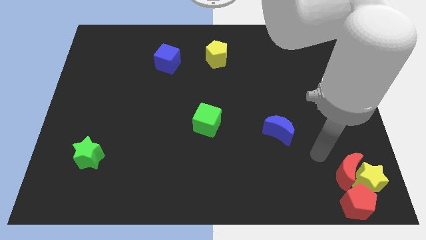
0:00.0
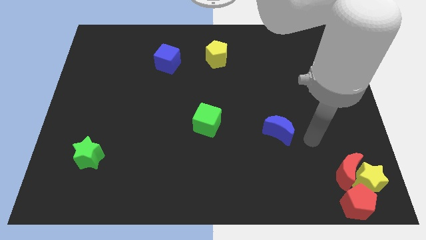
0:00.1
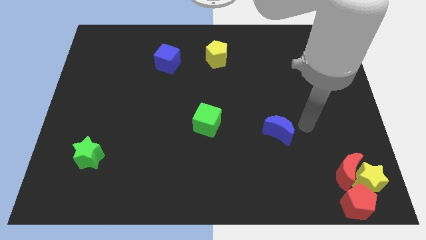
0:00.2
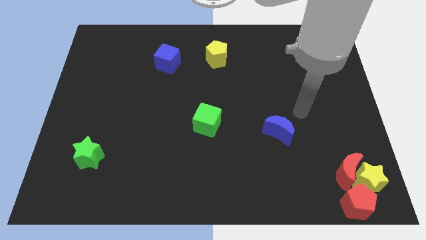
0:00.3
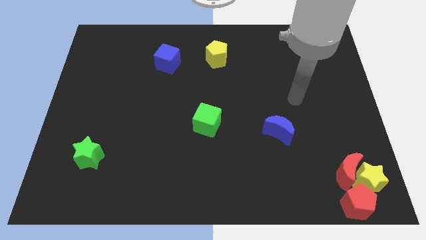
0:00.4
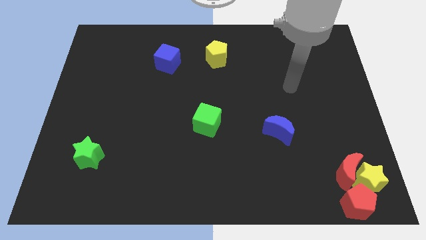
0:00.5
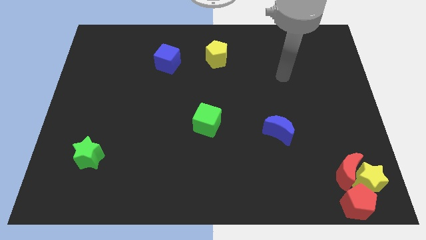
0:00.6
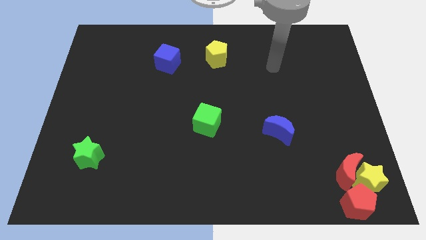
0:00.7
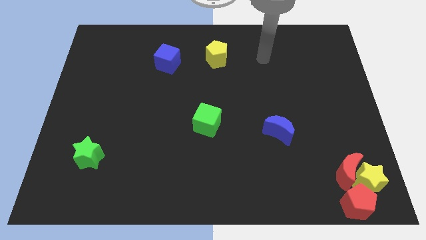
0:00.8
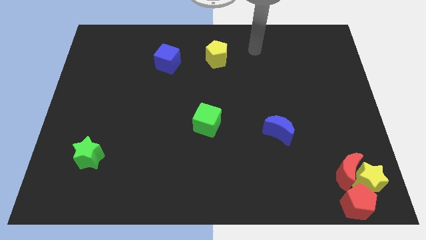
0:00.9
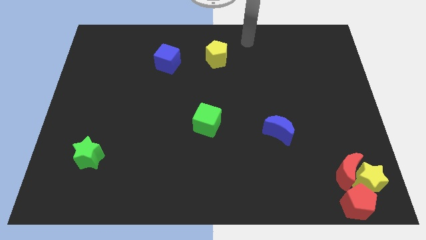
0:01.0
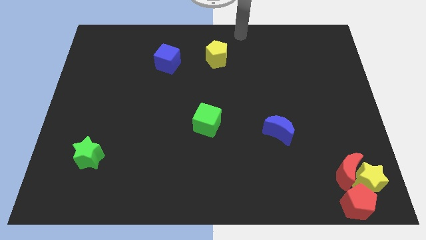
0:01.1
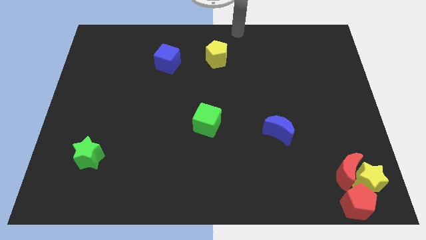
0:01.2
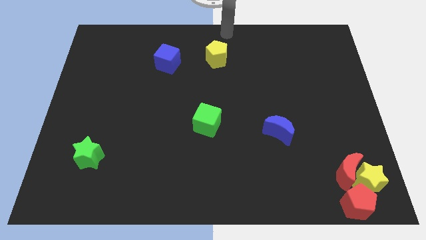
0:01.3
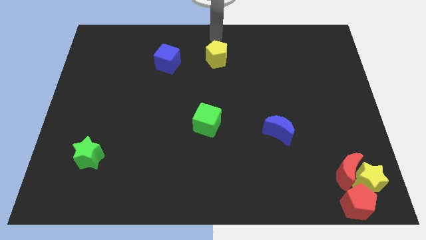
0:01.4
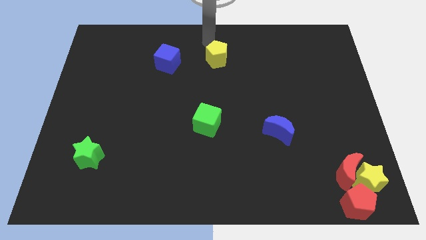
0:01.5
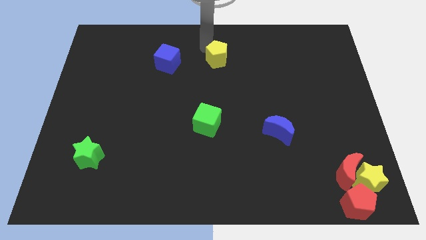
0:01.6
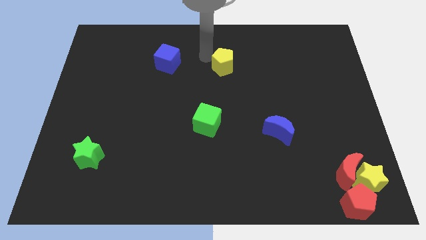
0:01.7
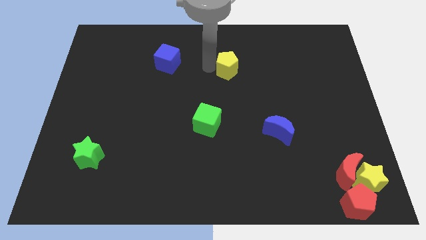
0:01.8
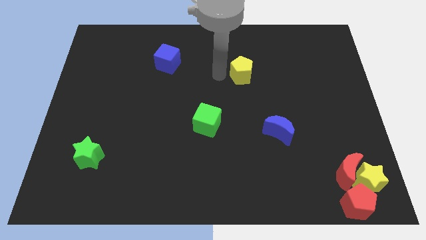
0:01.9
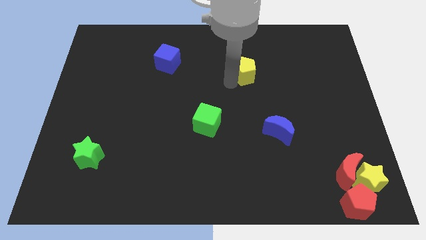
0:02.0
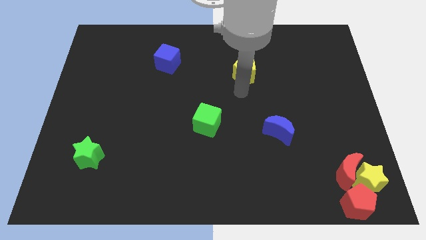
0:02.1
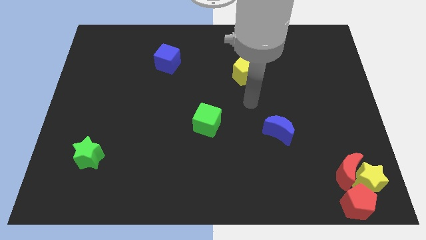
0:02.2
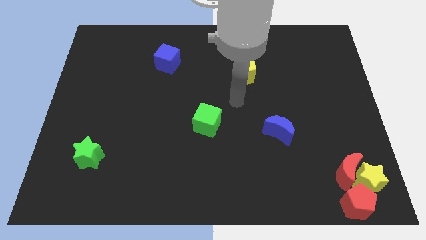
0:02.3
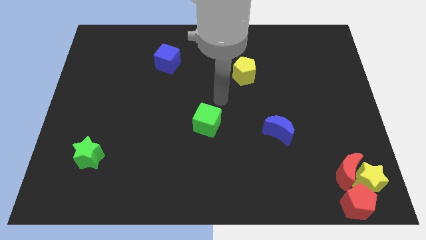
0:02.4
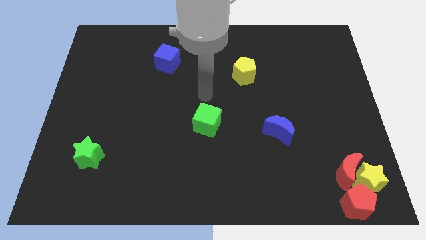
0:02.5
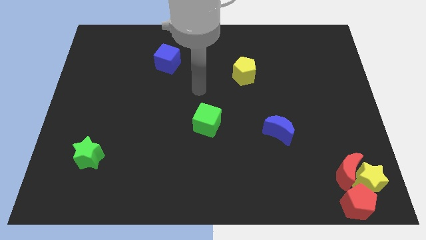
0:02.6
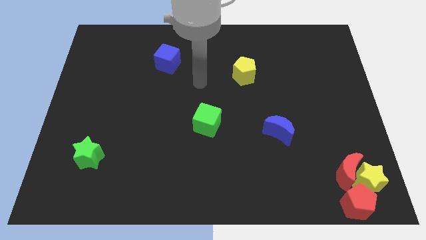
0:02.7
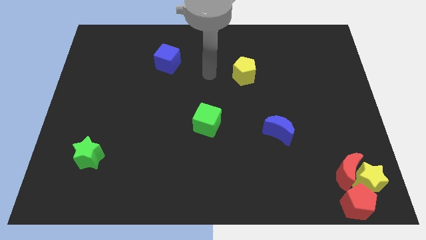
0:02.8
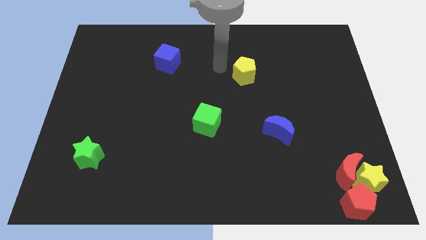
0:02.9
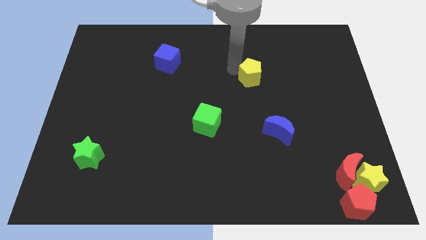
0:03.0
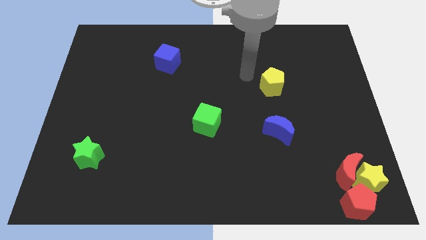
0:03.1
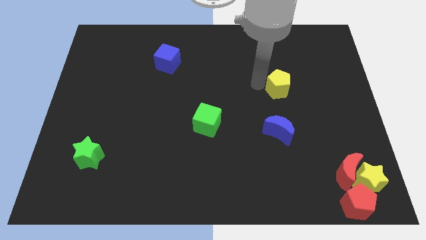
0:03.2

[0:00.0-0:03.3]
place the yellow pentagon above the blue moon

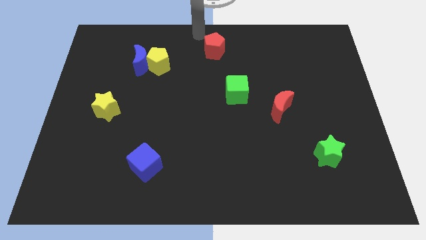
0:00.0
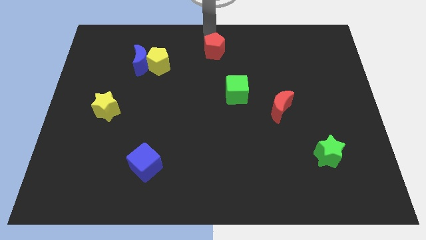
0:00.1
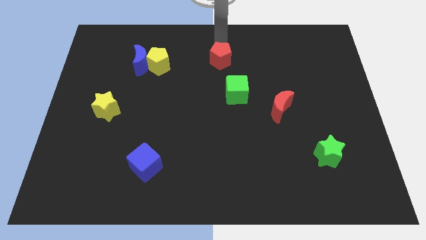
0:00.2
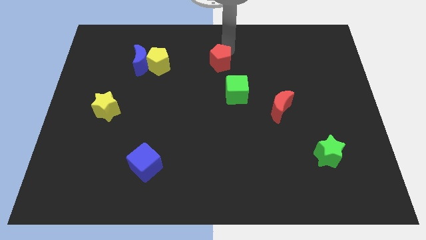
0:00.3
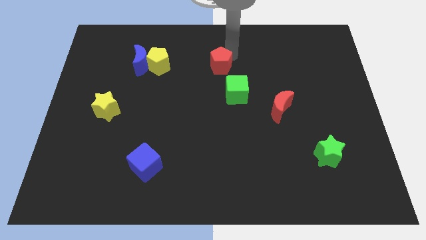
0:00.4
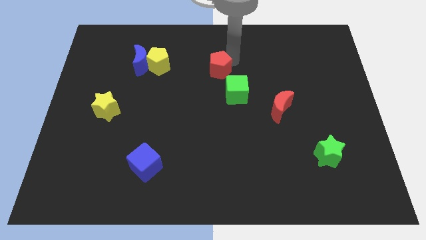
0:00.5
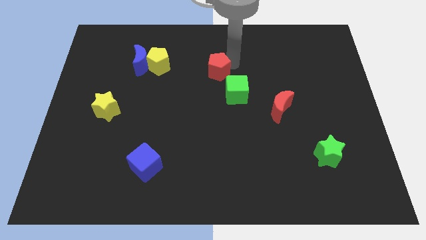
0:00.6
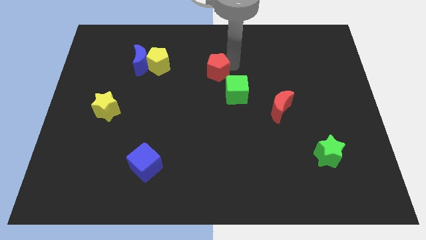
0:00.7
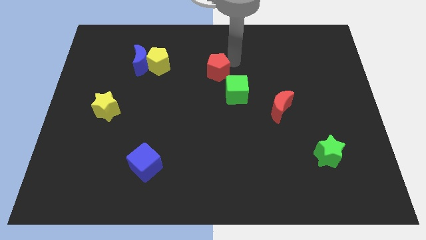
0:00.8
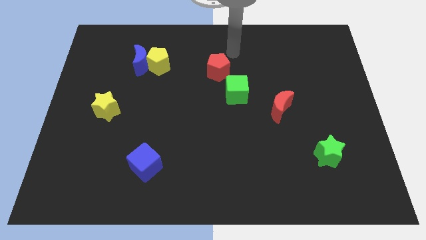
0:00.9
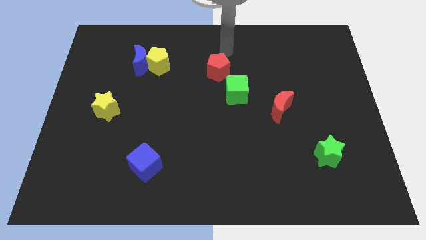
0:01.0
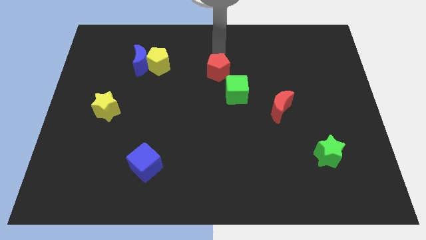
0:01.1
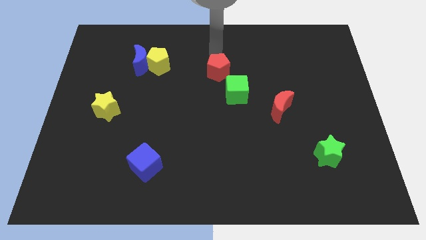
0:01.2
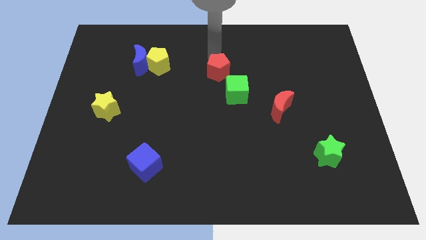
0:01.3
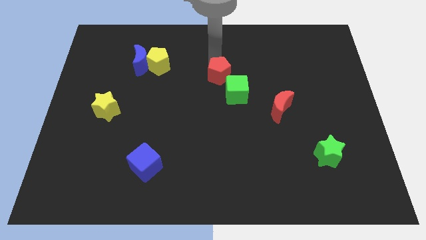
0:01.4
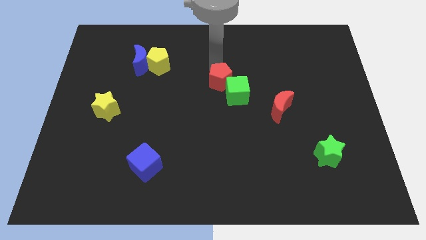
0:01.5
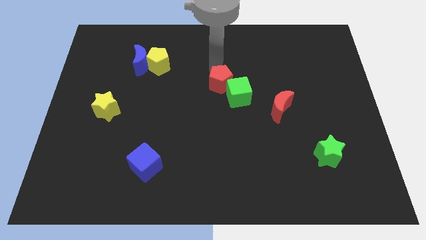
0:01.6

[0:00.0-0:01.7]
push the red pentagon into the green cube

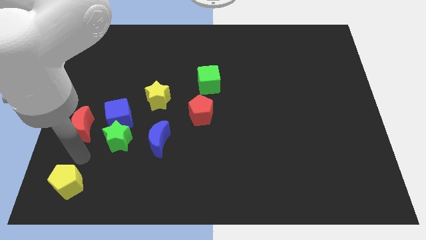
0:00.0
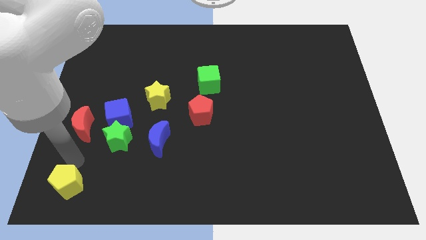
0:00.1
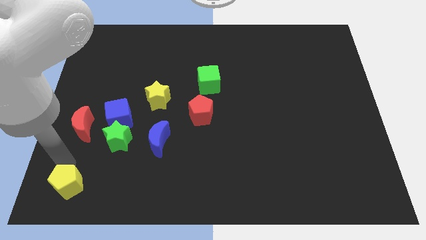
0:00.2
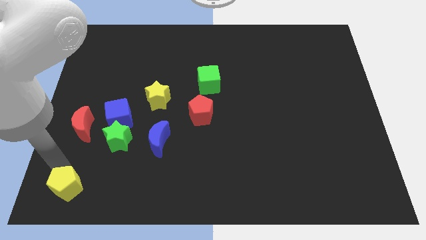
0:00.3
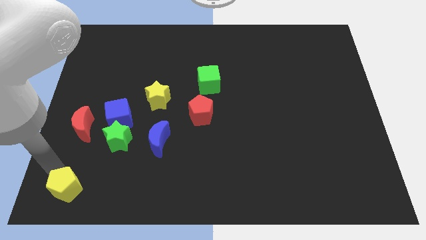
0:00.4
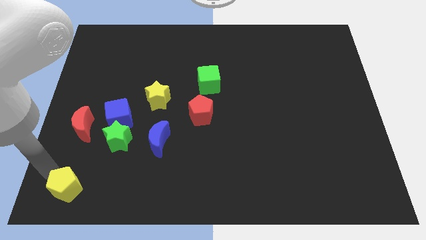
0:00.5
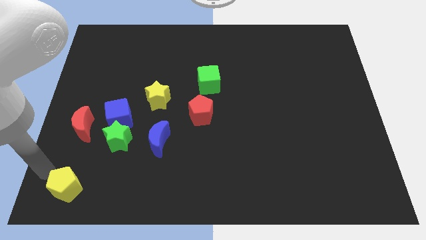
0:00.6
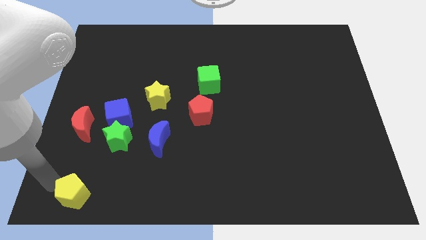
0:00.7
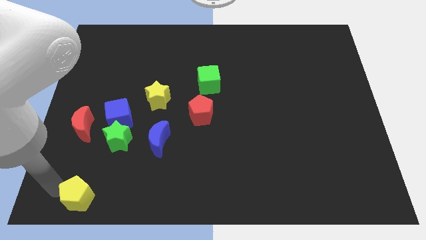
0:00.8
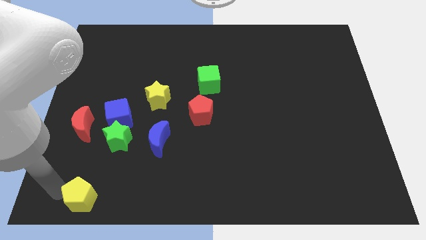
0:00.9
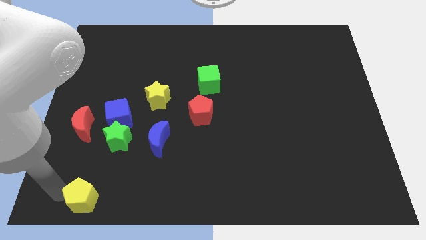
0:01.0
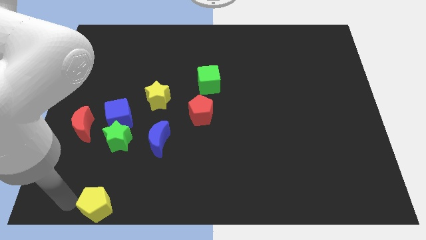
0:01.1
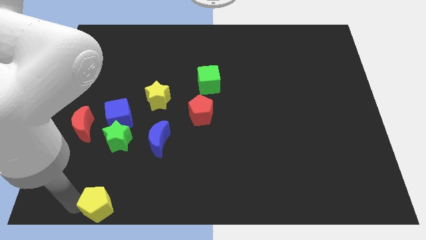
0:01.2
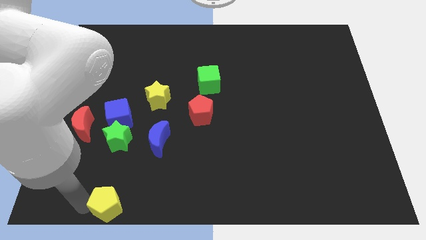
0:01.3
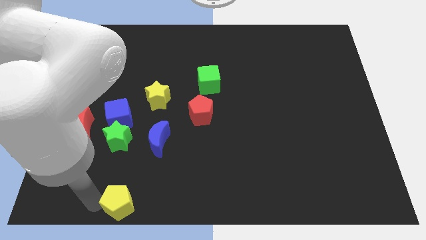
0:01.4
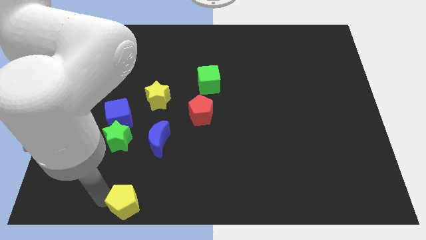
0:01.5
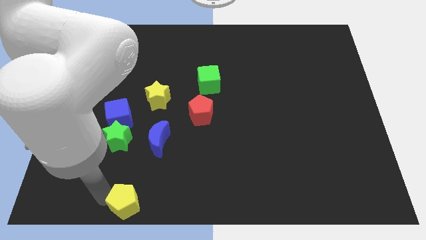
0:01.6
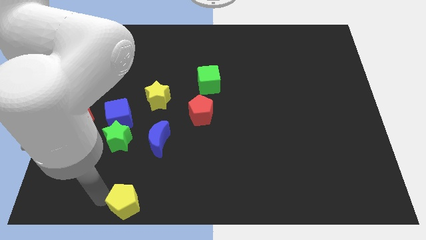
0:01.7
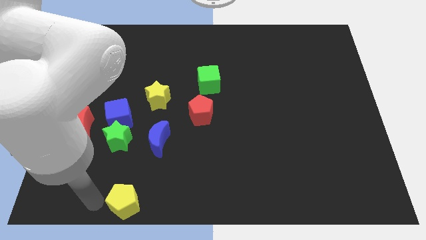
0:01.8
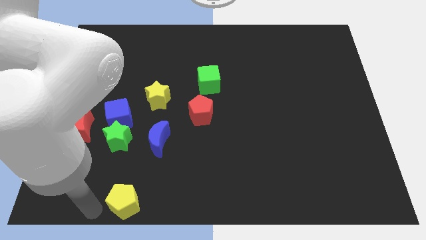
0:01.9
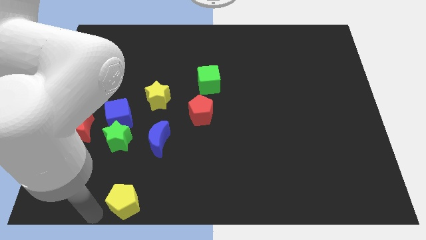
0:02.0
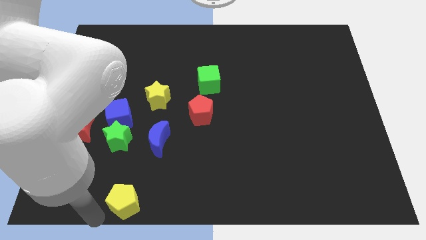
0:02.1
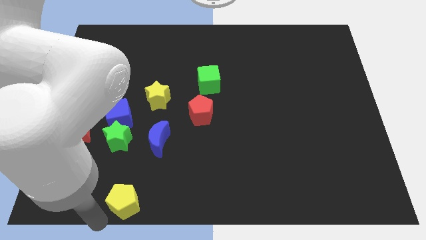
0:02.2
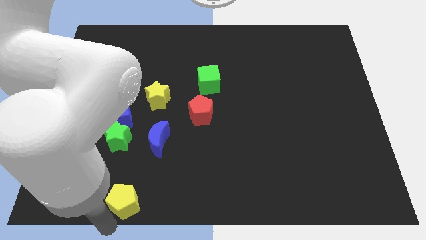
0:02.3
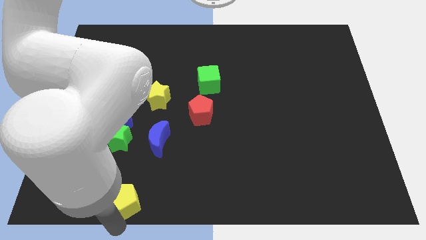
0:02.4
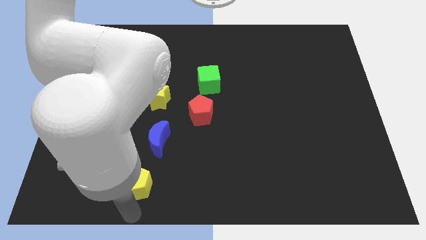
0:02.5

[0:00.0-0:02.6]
slide the yellow pentagon to the bottom left of the blue crescent

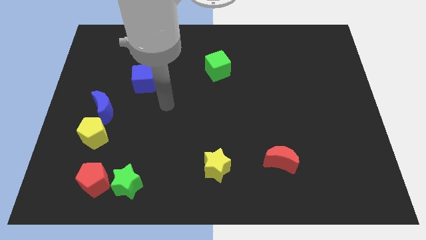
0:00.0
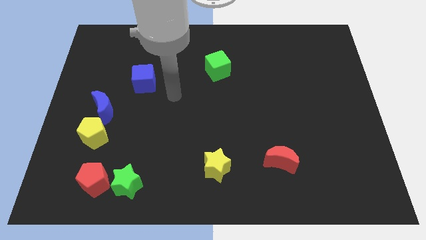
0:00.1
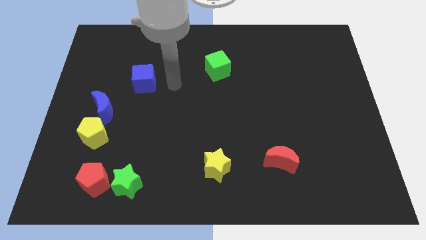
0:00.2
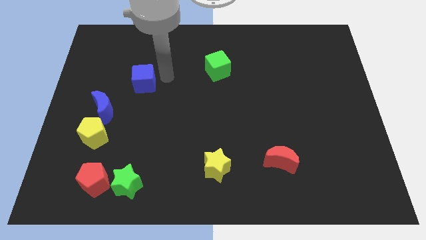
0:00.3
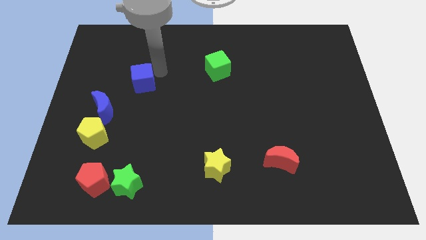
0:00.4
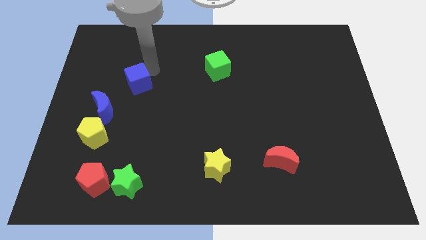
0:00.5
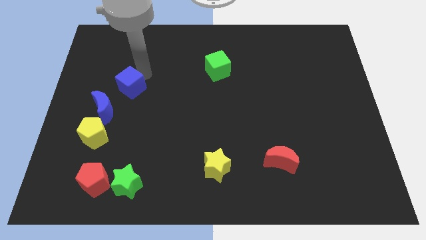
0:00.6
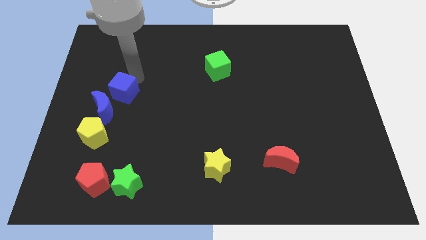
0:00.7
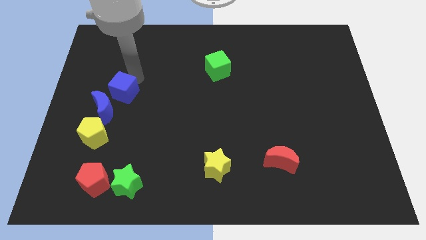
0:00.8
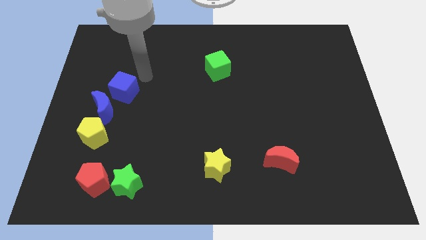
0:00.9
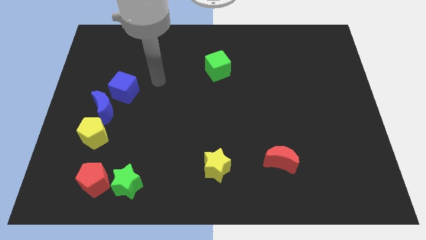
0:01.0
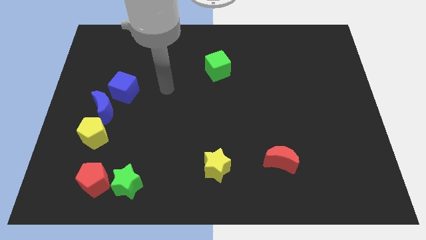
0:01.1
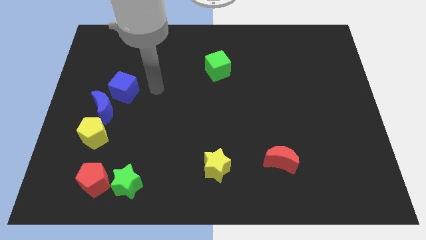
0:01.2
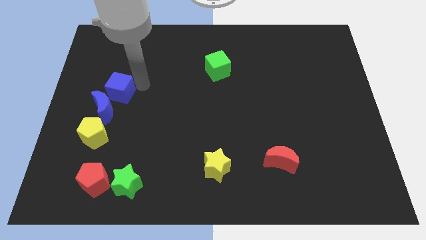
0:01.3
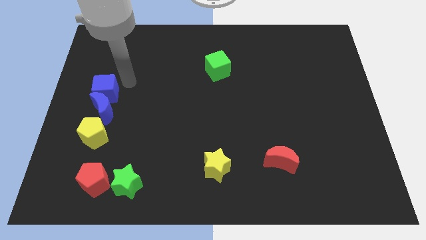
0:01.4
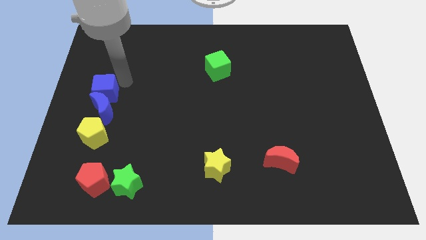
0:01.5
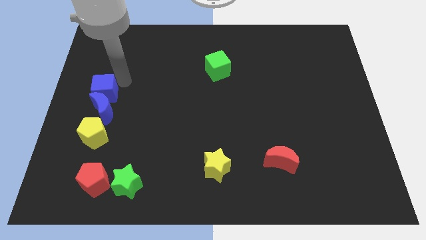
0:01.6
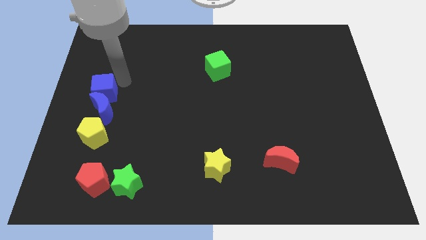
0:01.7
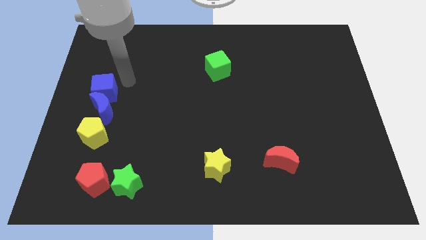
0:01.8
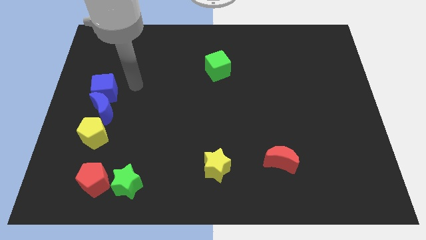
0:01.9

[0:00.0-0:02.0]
move the blue cube into the blue moon
